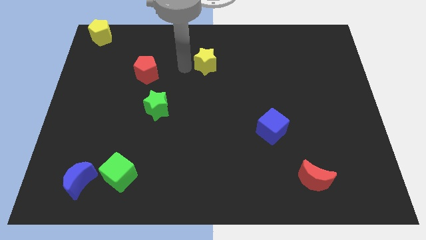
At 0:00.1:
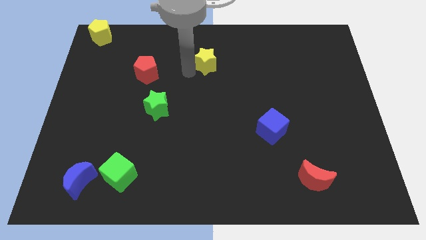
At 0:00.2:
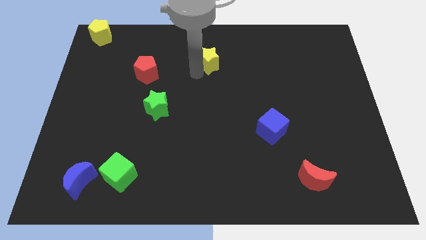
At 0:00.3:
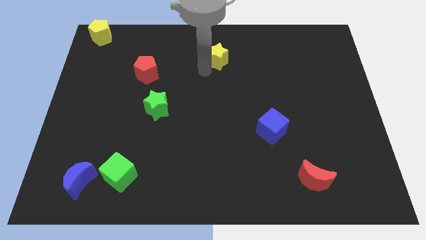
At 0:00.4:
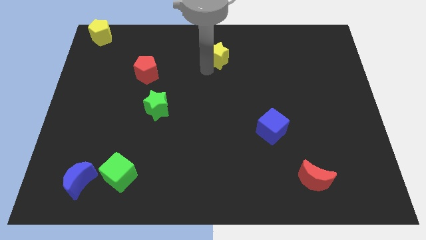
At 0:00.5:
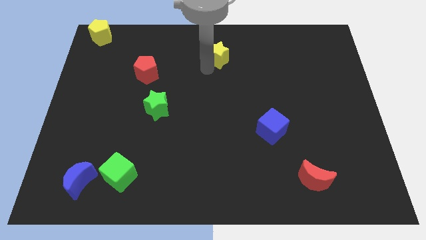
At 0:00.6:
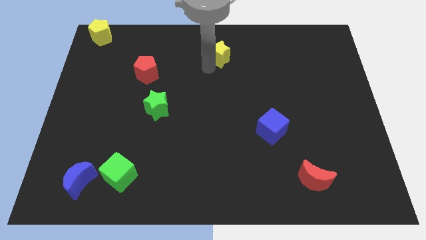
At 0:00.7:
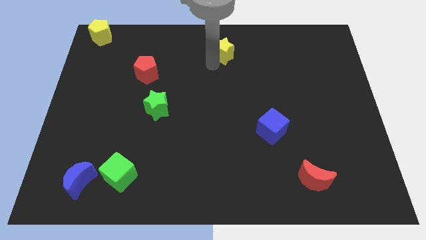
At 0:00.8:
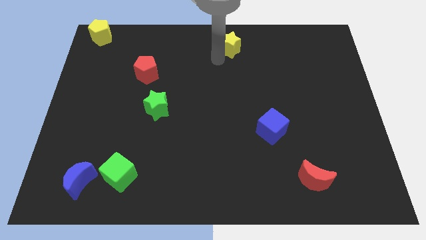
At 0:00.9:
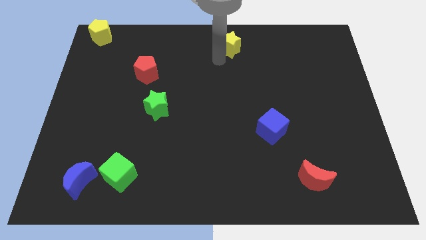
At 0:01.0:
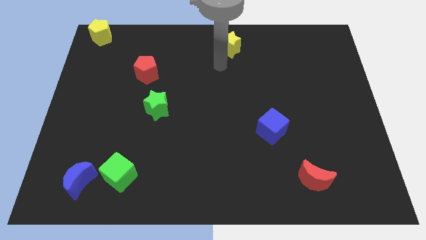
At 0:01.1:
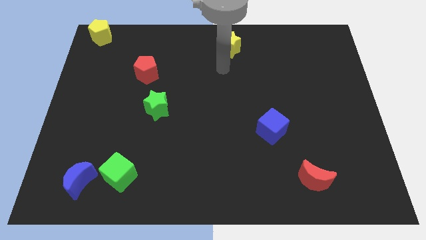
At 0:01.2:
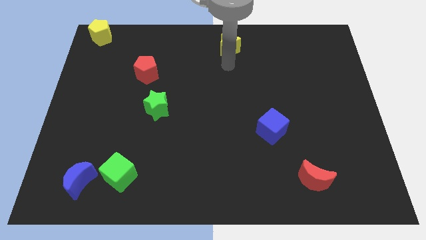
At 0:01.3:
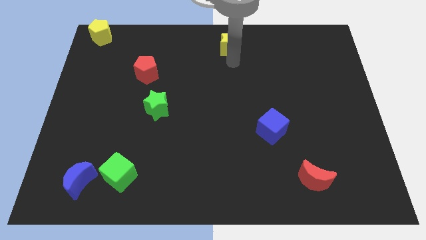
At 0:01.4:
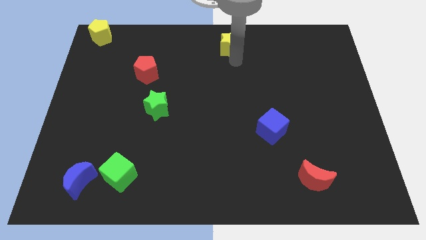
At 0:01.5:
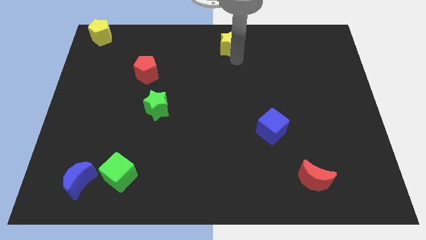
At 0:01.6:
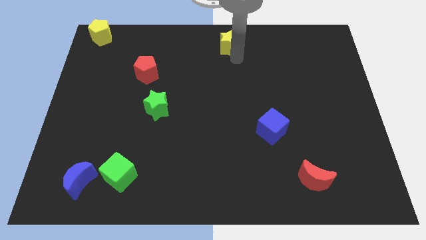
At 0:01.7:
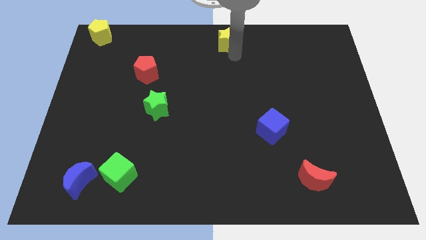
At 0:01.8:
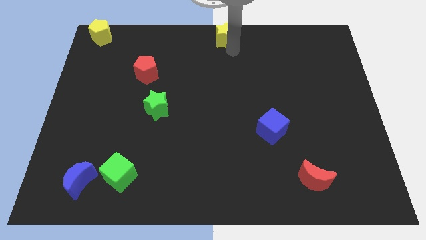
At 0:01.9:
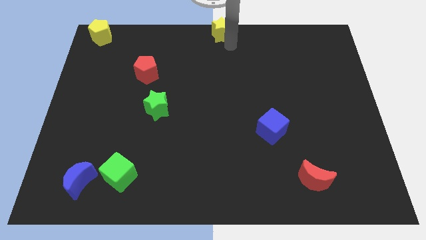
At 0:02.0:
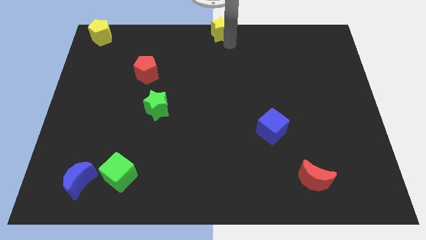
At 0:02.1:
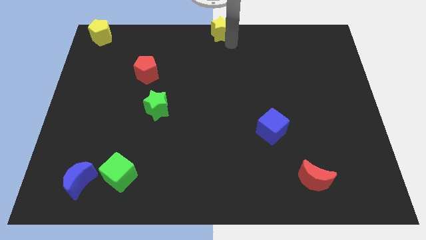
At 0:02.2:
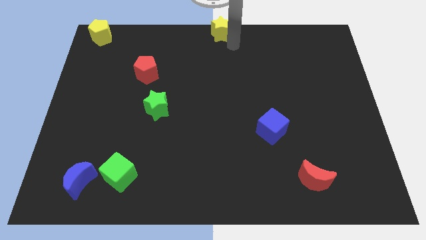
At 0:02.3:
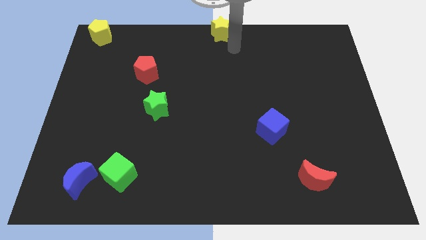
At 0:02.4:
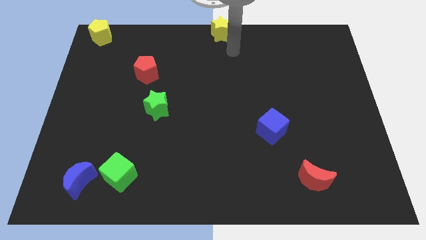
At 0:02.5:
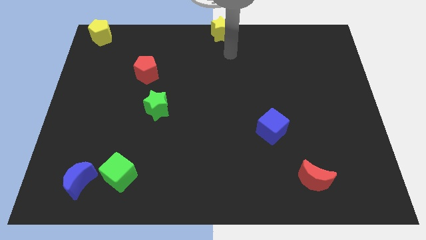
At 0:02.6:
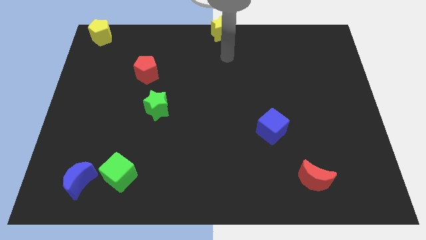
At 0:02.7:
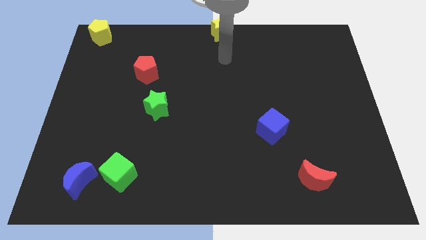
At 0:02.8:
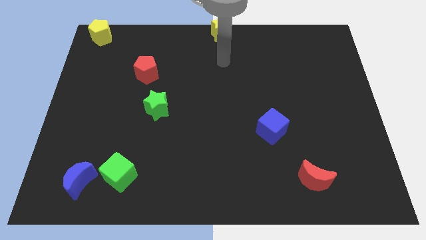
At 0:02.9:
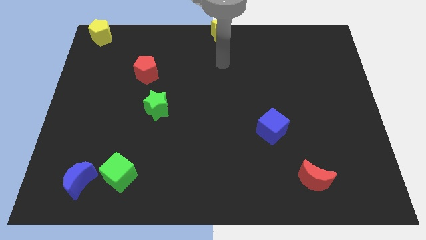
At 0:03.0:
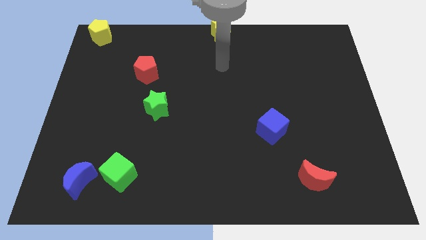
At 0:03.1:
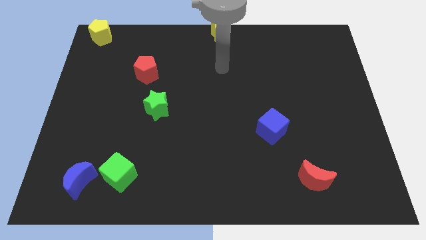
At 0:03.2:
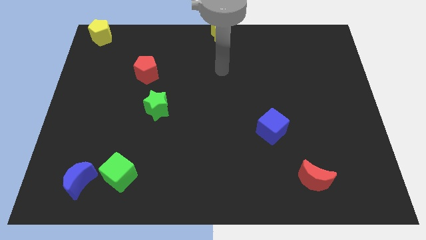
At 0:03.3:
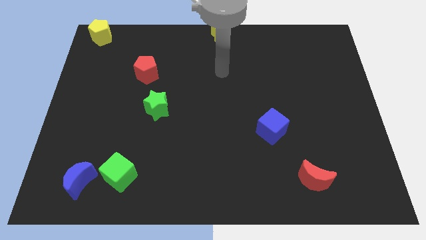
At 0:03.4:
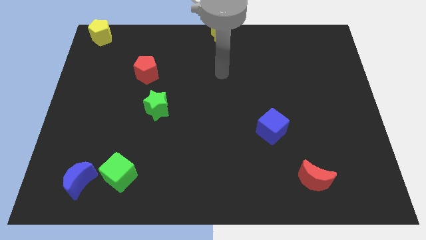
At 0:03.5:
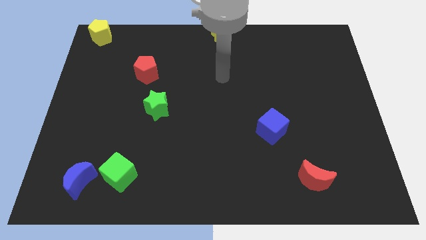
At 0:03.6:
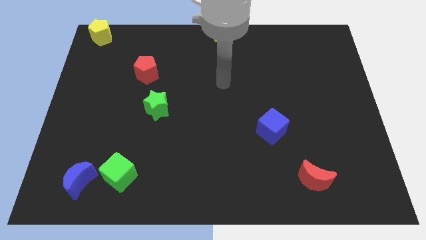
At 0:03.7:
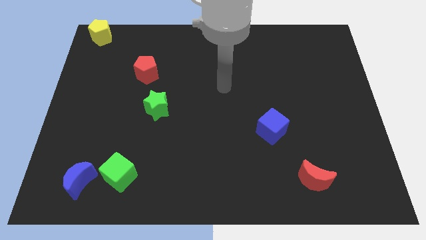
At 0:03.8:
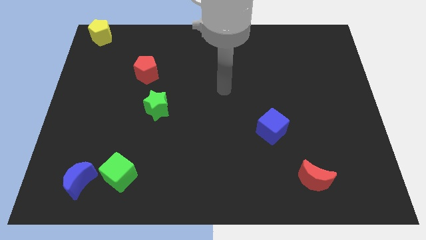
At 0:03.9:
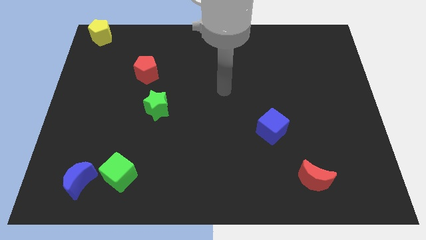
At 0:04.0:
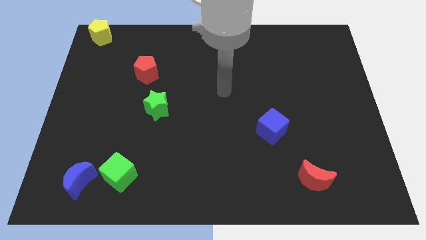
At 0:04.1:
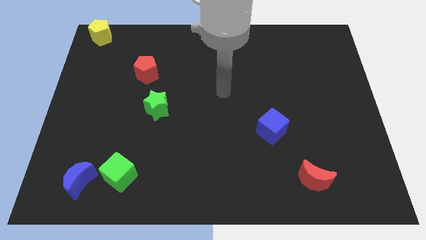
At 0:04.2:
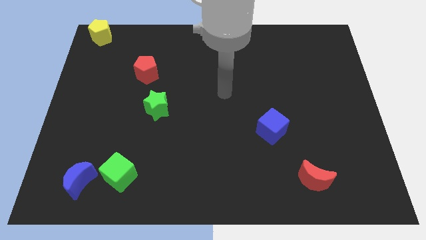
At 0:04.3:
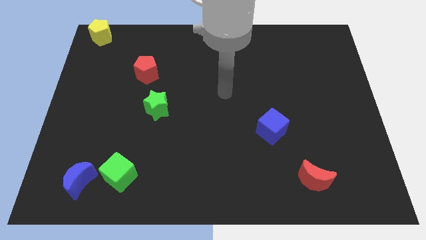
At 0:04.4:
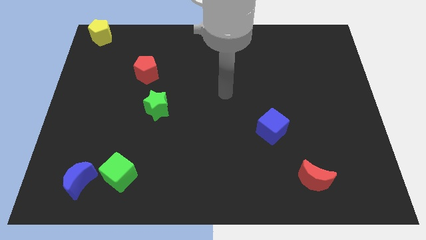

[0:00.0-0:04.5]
place the yellow star towards the top center of the board

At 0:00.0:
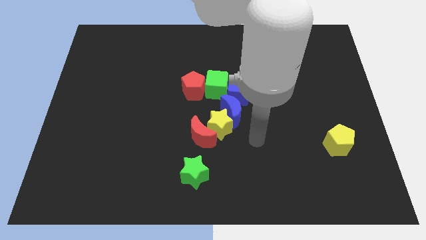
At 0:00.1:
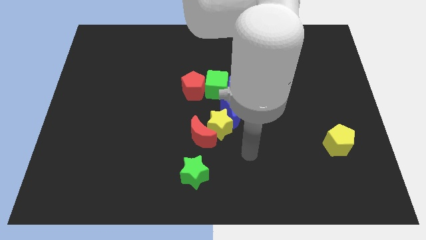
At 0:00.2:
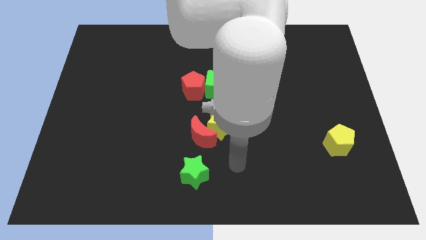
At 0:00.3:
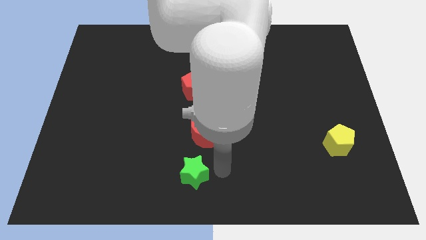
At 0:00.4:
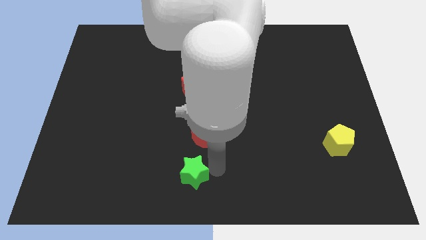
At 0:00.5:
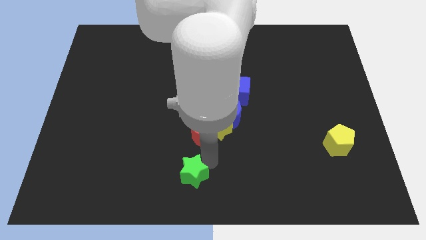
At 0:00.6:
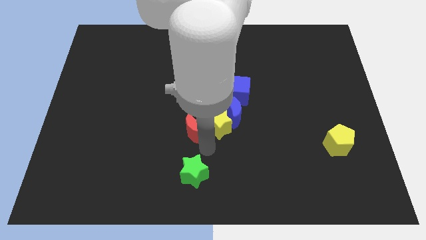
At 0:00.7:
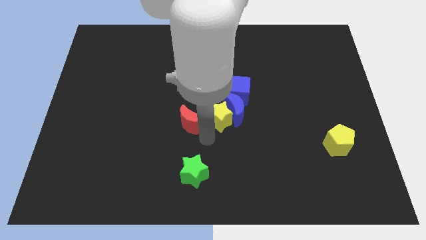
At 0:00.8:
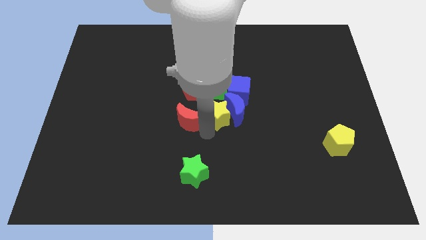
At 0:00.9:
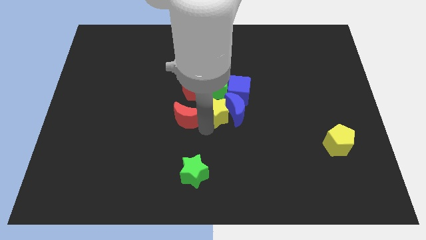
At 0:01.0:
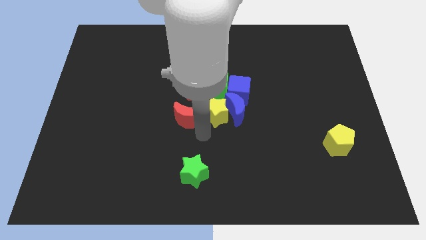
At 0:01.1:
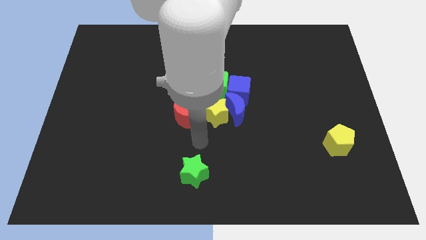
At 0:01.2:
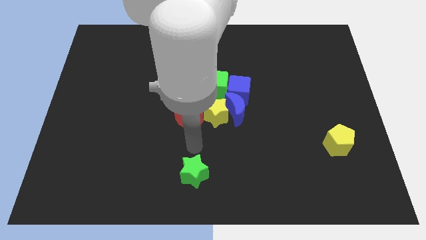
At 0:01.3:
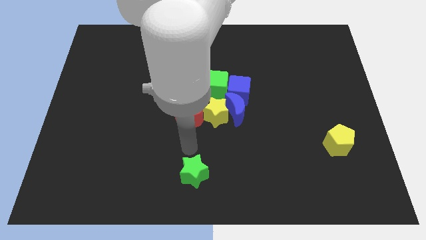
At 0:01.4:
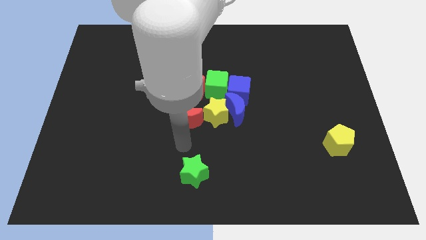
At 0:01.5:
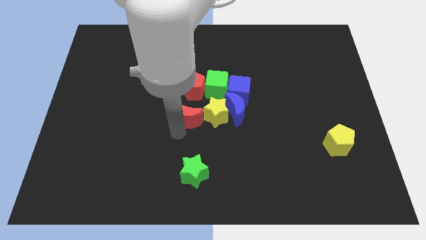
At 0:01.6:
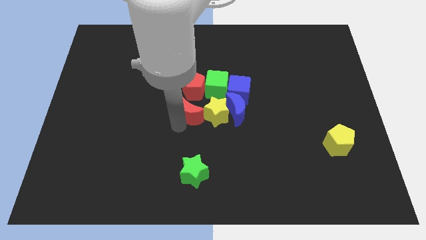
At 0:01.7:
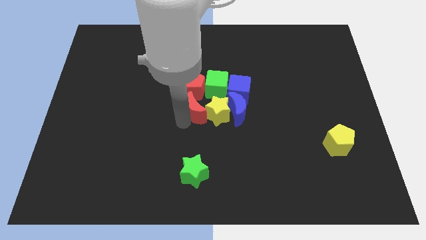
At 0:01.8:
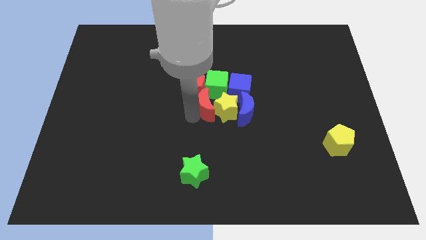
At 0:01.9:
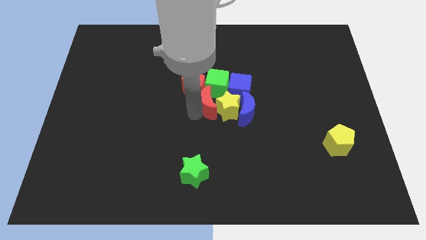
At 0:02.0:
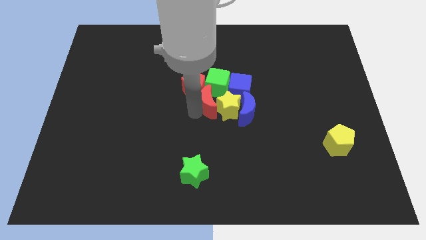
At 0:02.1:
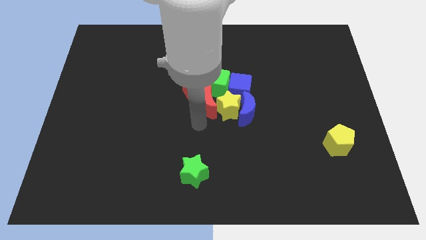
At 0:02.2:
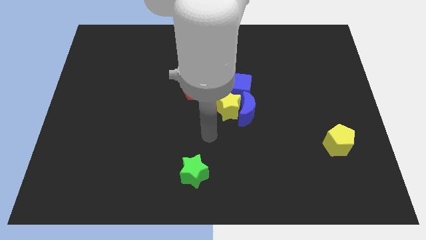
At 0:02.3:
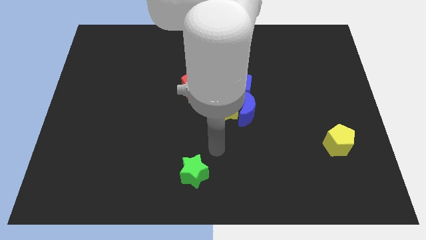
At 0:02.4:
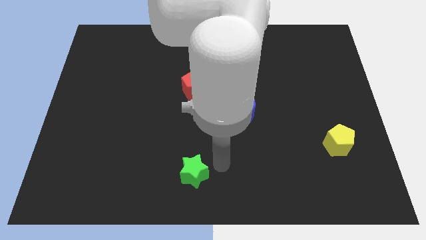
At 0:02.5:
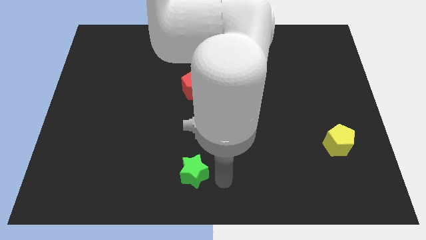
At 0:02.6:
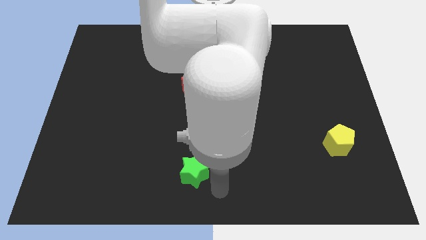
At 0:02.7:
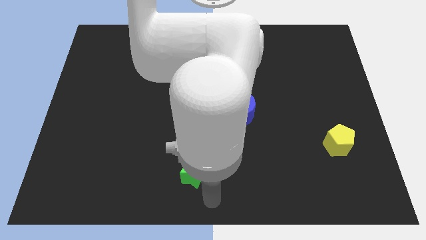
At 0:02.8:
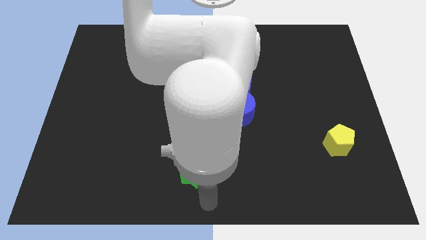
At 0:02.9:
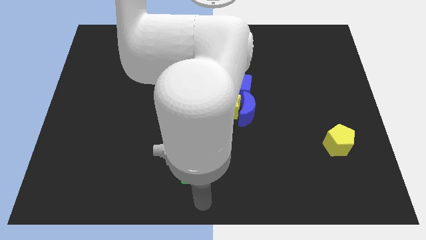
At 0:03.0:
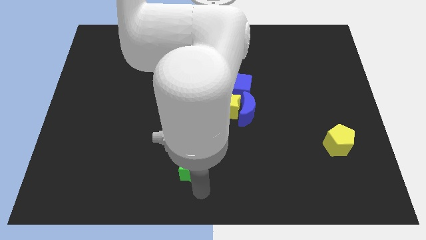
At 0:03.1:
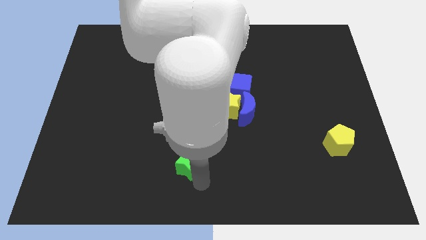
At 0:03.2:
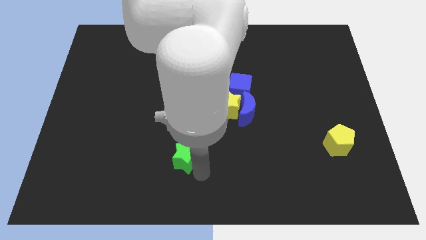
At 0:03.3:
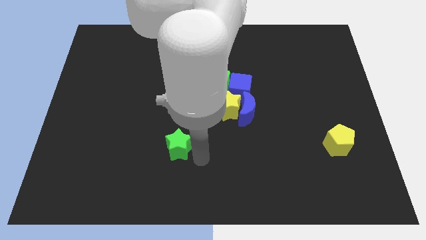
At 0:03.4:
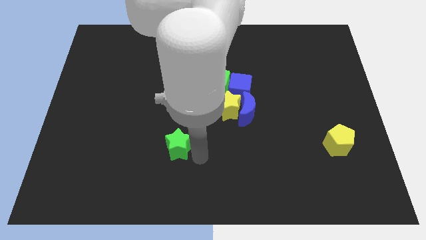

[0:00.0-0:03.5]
move the red moon and the yellow star close to other blocks

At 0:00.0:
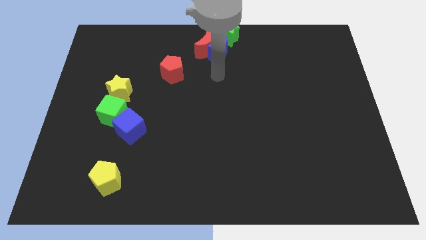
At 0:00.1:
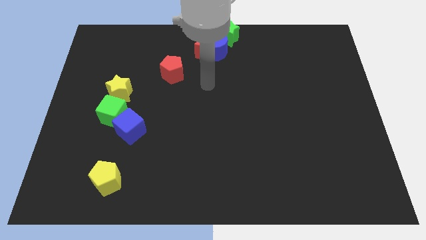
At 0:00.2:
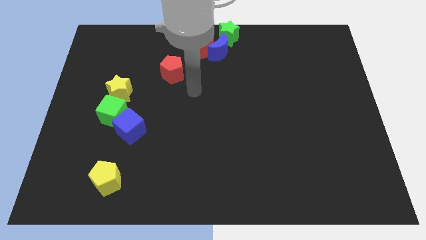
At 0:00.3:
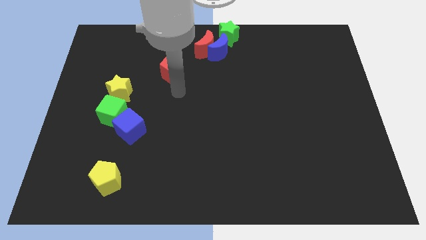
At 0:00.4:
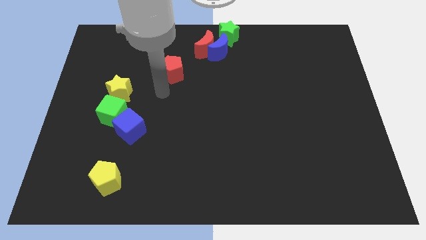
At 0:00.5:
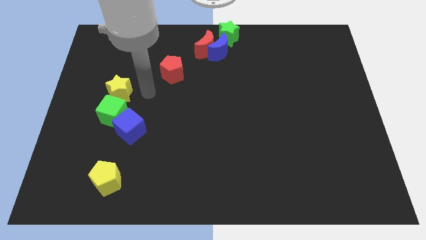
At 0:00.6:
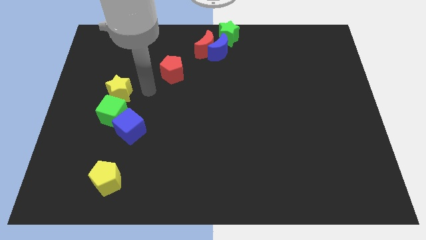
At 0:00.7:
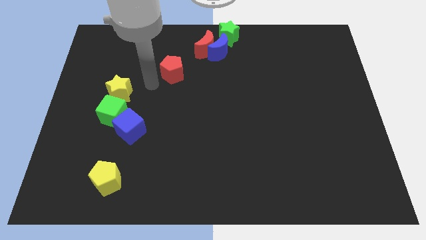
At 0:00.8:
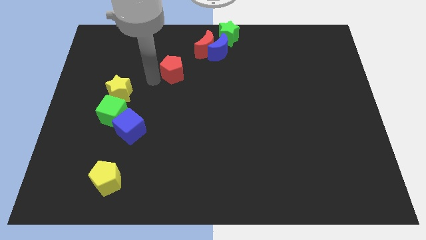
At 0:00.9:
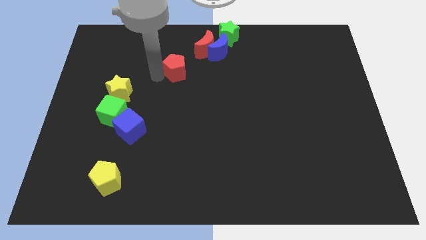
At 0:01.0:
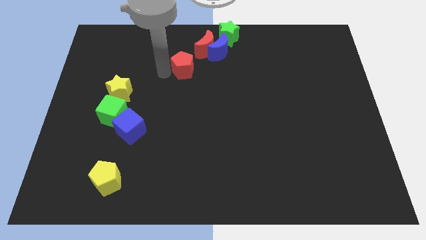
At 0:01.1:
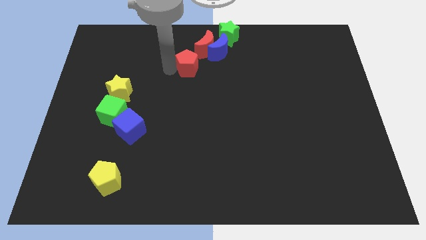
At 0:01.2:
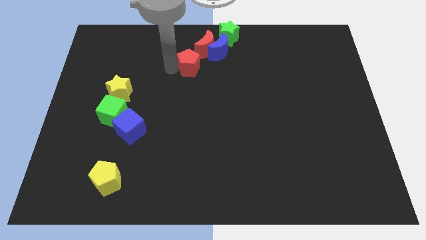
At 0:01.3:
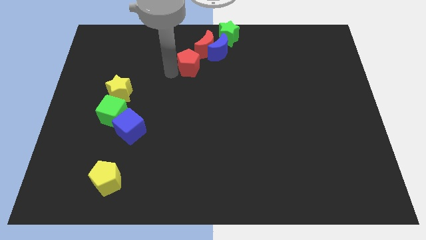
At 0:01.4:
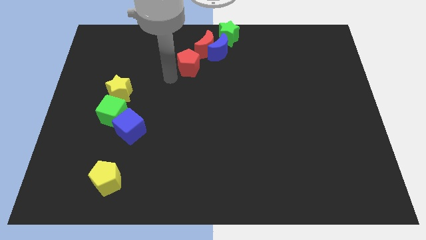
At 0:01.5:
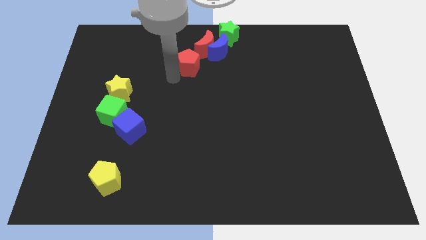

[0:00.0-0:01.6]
move the red pentagon to the bottom of the red crescent
